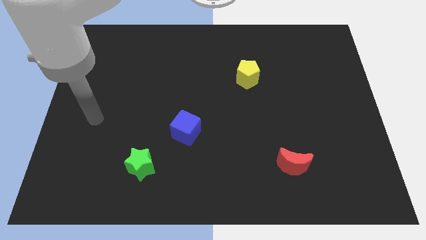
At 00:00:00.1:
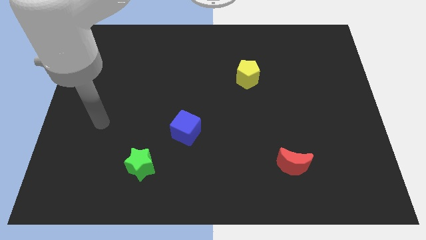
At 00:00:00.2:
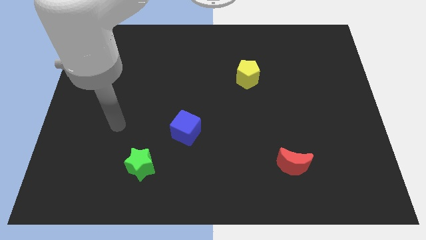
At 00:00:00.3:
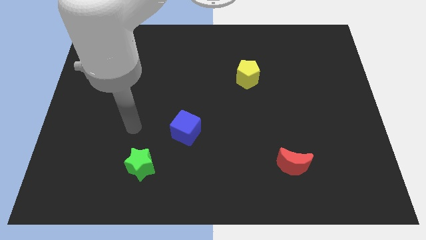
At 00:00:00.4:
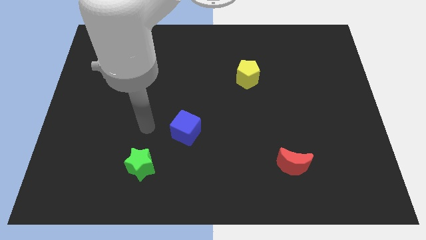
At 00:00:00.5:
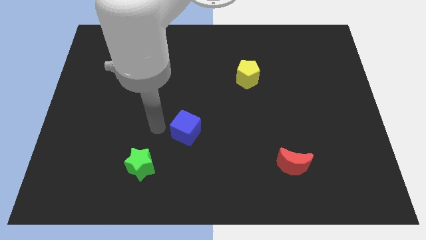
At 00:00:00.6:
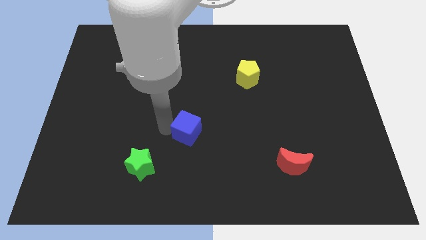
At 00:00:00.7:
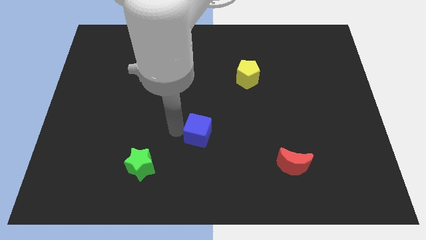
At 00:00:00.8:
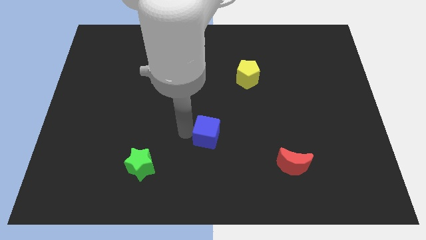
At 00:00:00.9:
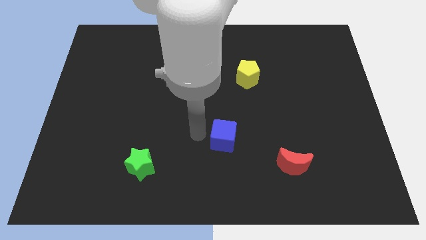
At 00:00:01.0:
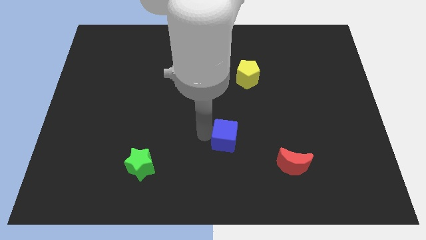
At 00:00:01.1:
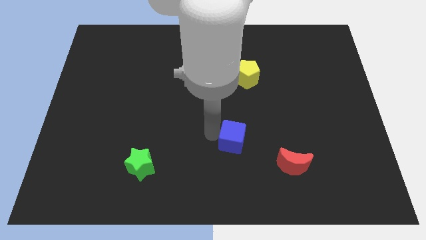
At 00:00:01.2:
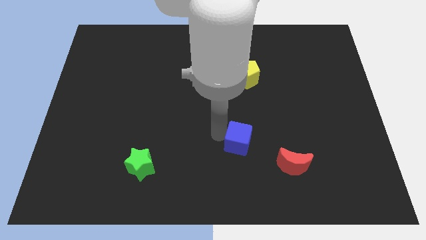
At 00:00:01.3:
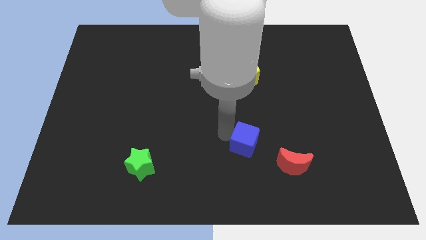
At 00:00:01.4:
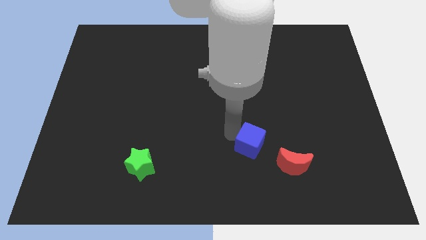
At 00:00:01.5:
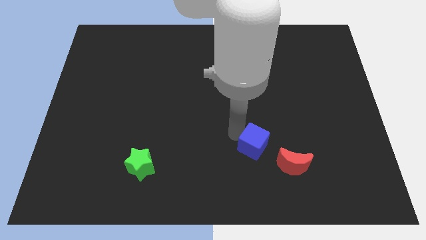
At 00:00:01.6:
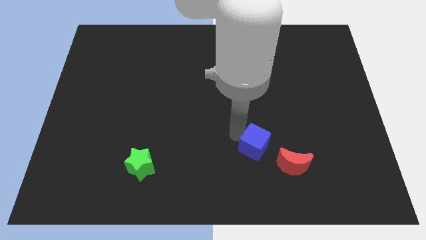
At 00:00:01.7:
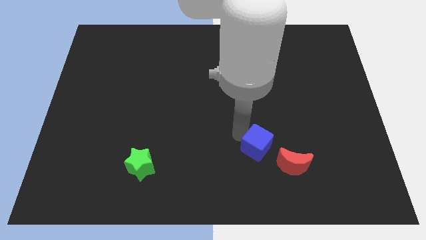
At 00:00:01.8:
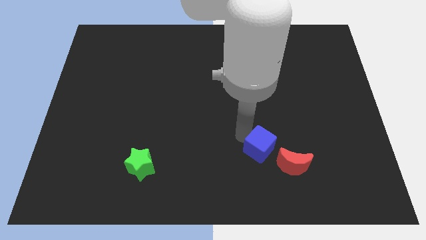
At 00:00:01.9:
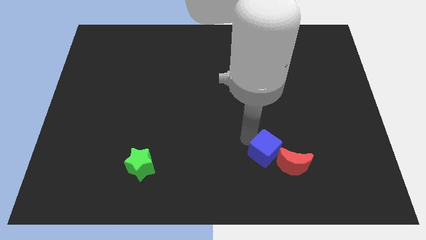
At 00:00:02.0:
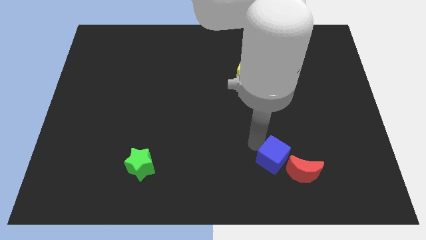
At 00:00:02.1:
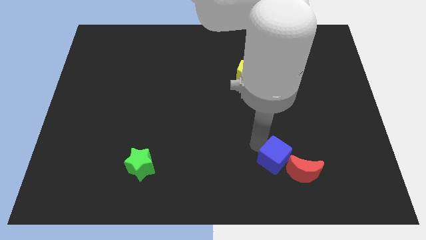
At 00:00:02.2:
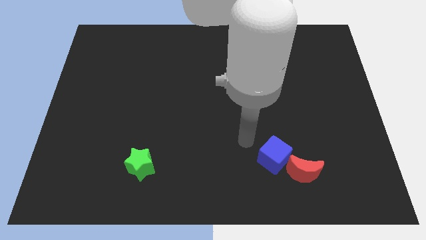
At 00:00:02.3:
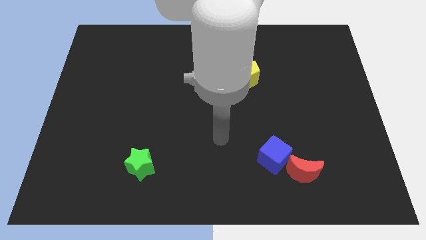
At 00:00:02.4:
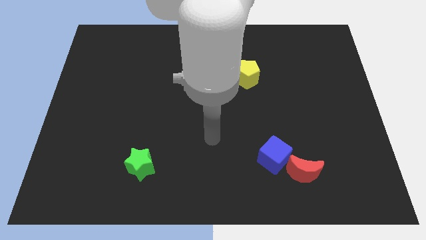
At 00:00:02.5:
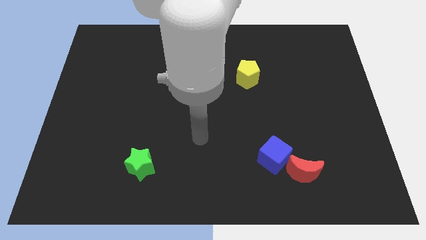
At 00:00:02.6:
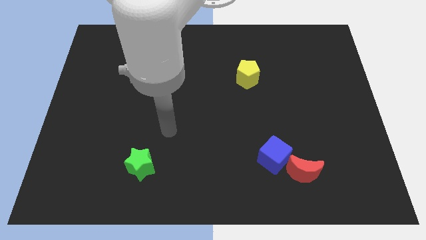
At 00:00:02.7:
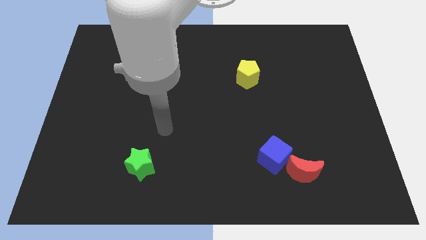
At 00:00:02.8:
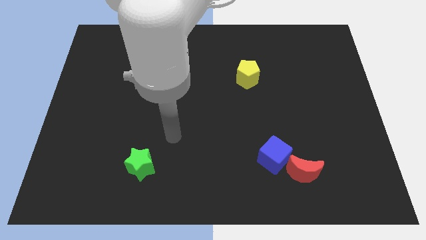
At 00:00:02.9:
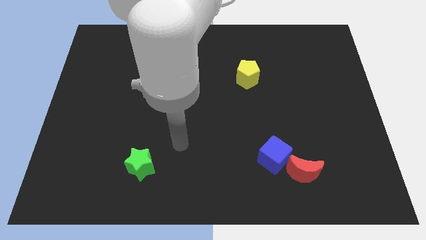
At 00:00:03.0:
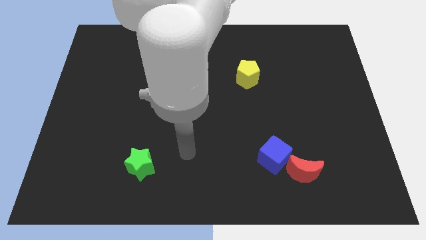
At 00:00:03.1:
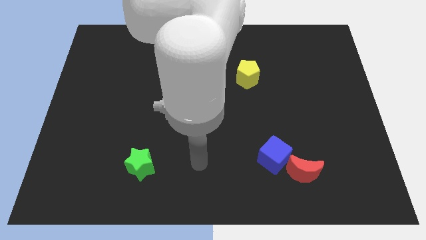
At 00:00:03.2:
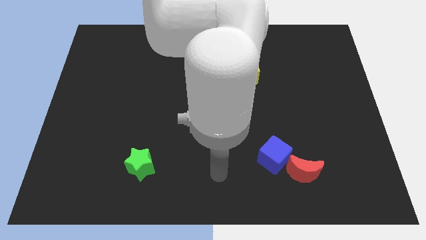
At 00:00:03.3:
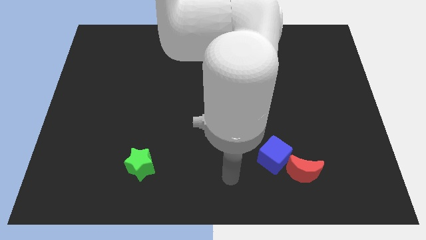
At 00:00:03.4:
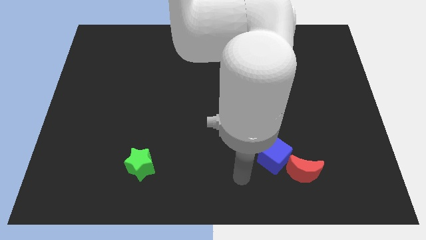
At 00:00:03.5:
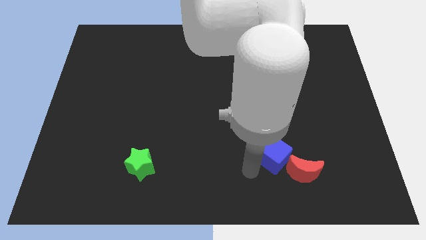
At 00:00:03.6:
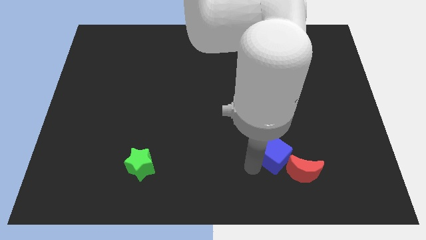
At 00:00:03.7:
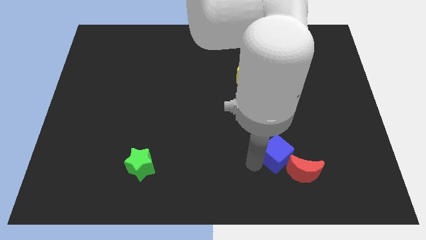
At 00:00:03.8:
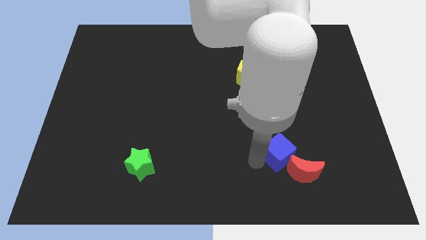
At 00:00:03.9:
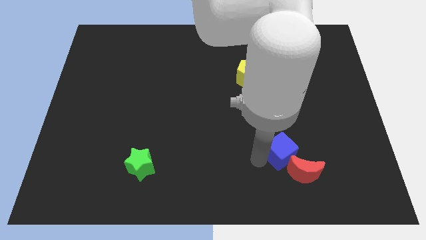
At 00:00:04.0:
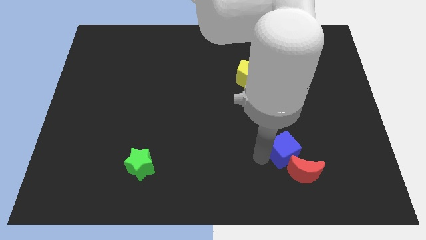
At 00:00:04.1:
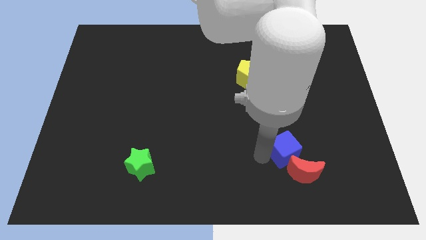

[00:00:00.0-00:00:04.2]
push the cube next to the moon

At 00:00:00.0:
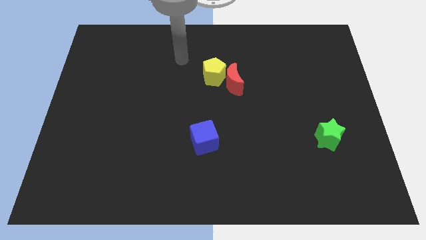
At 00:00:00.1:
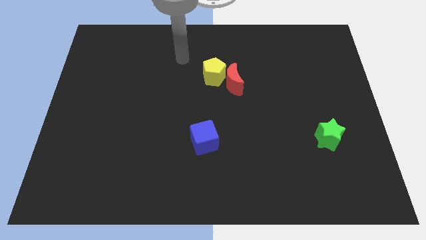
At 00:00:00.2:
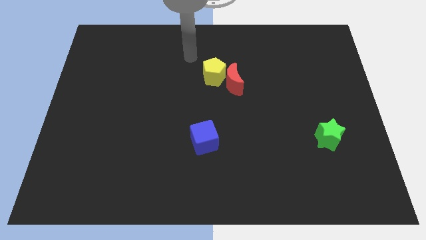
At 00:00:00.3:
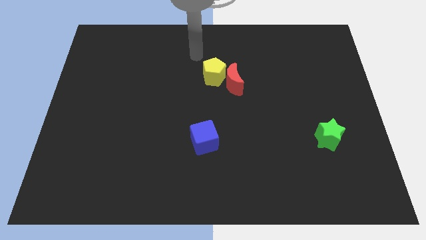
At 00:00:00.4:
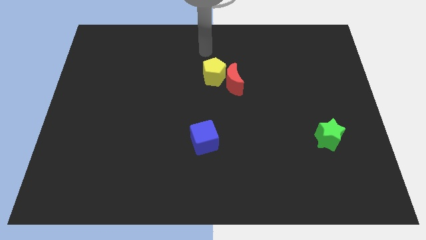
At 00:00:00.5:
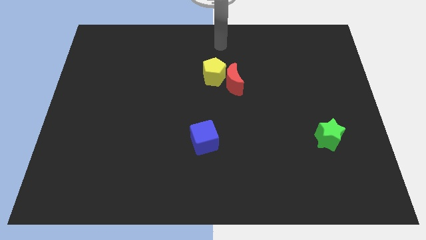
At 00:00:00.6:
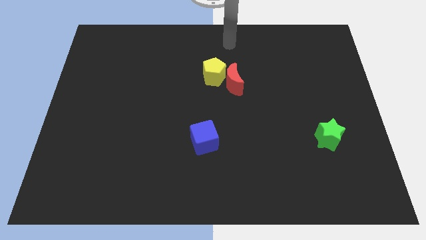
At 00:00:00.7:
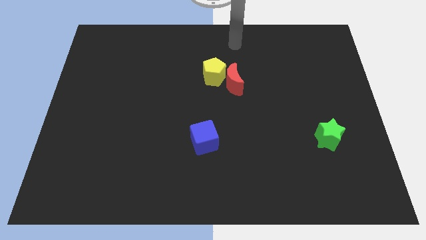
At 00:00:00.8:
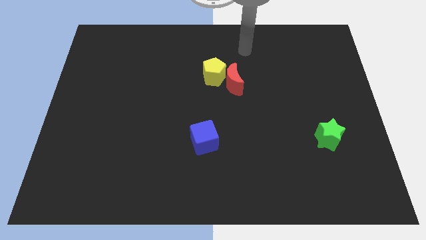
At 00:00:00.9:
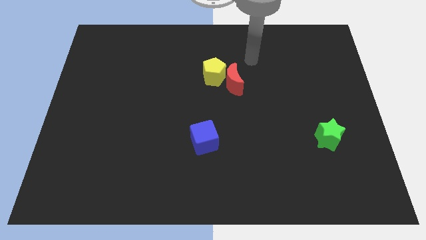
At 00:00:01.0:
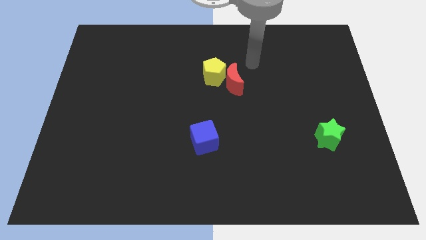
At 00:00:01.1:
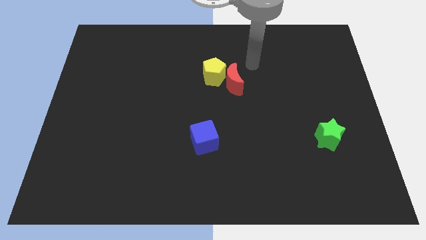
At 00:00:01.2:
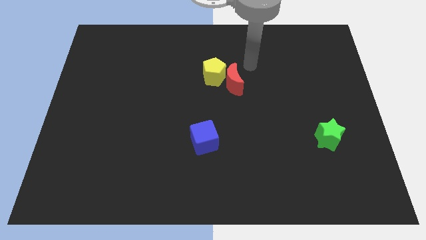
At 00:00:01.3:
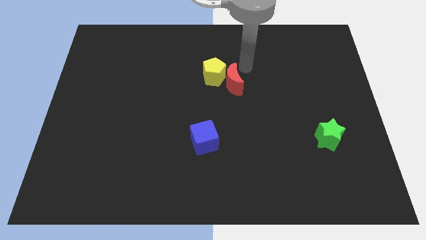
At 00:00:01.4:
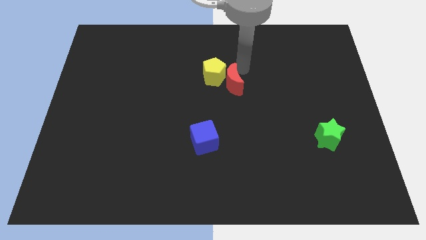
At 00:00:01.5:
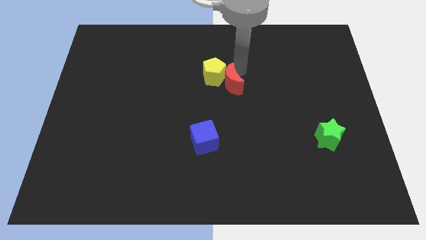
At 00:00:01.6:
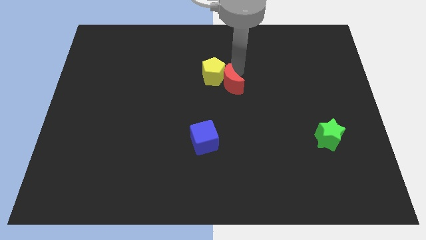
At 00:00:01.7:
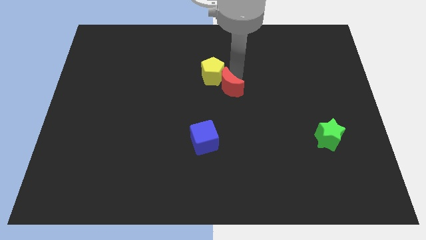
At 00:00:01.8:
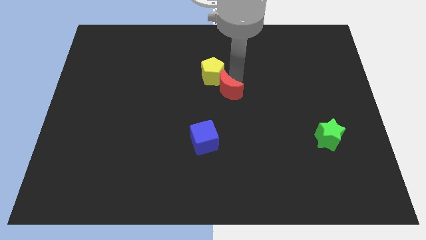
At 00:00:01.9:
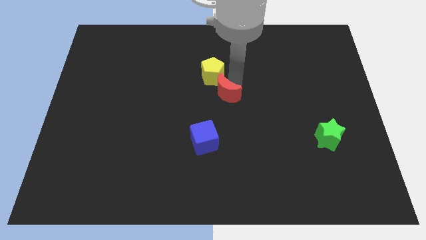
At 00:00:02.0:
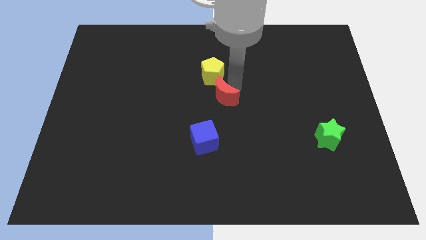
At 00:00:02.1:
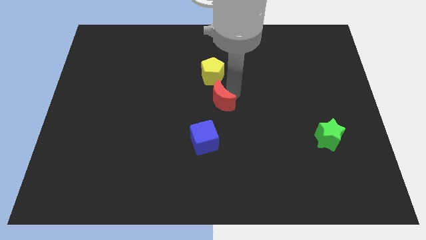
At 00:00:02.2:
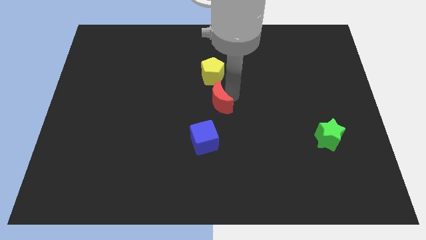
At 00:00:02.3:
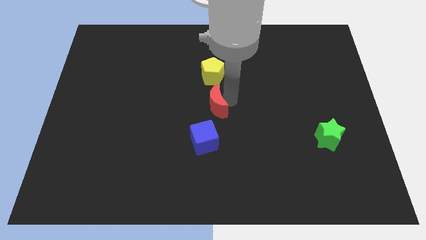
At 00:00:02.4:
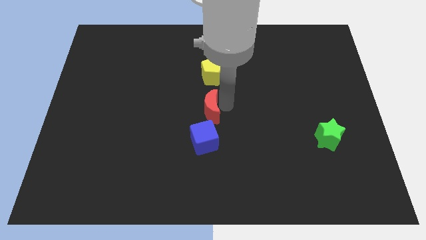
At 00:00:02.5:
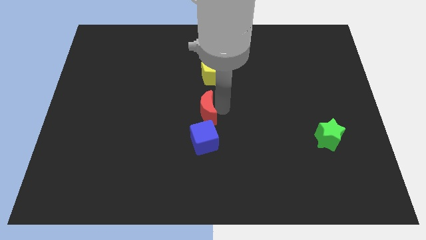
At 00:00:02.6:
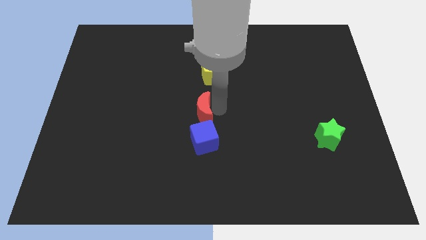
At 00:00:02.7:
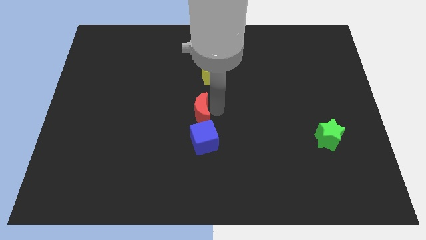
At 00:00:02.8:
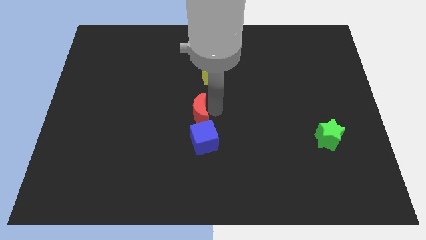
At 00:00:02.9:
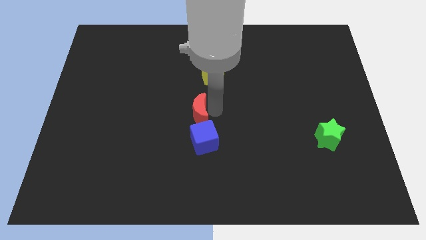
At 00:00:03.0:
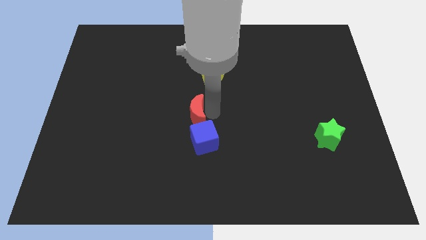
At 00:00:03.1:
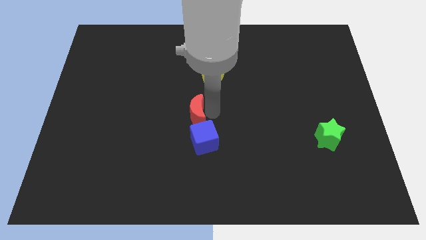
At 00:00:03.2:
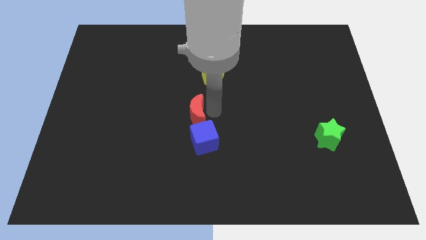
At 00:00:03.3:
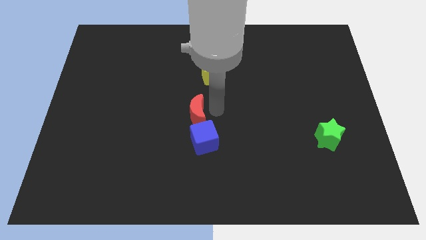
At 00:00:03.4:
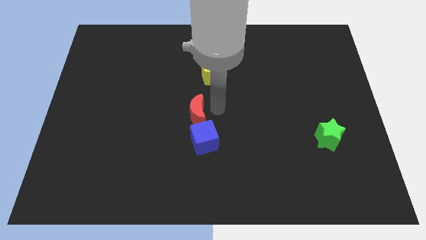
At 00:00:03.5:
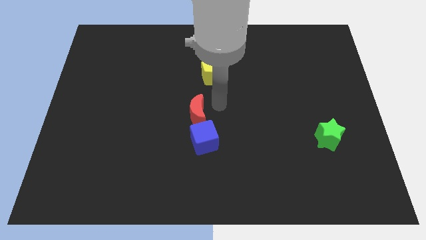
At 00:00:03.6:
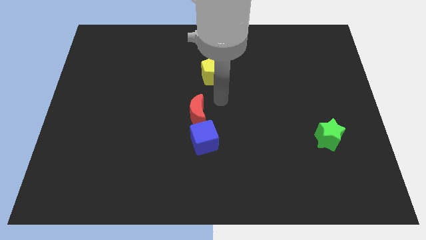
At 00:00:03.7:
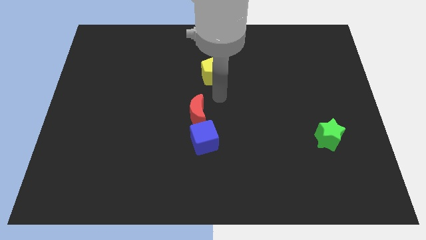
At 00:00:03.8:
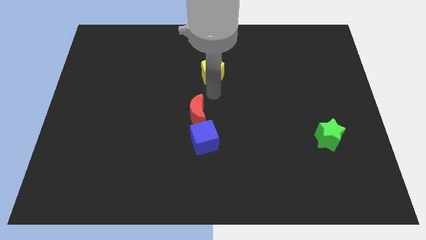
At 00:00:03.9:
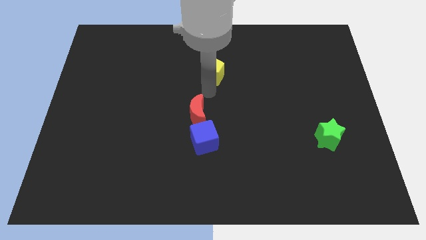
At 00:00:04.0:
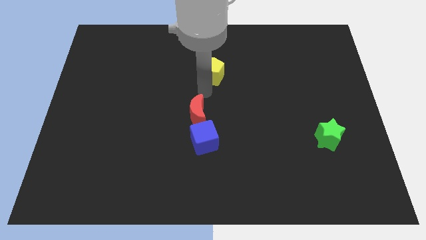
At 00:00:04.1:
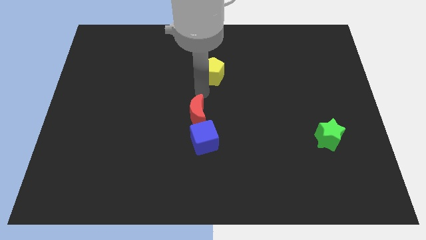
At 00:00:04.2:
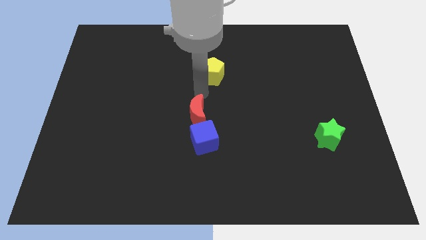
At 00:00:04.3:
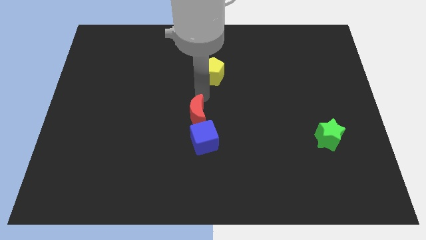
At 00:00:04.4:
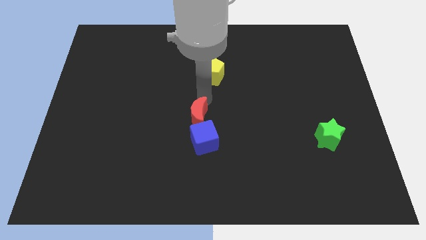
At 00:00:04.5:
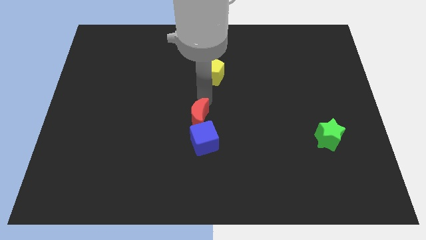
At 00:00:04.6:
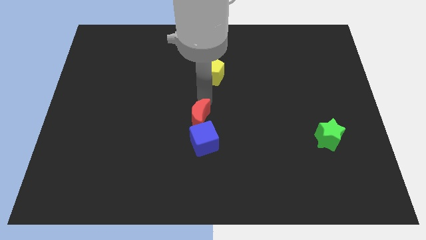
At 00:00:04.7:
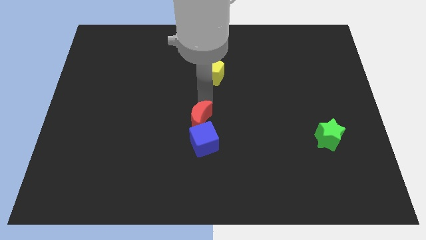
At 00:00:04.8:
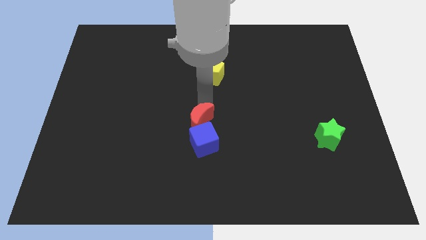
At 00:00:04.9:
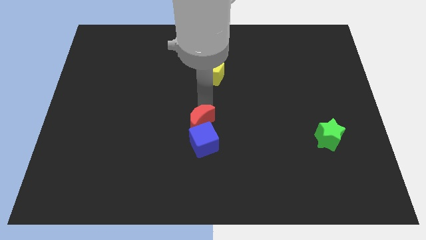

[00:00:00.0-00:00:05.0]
push the red block close to the blue block
